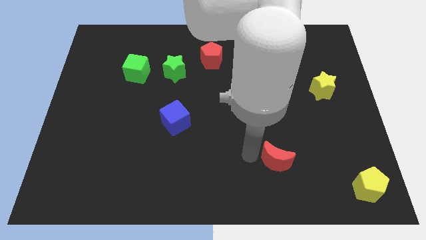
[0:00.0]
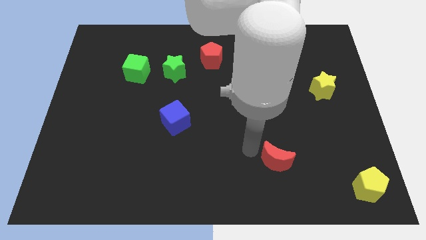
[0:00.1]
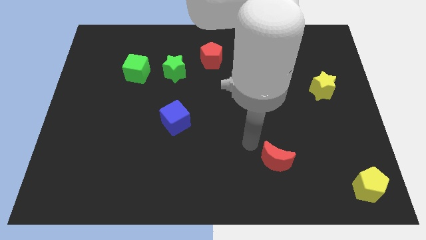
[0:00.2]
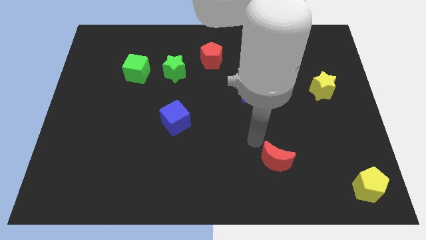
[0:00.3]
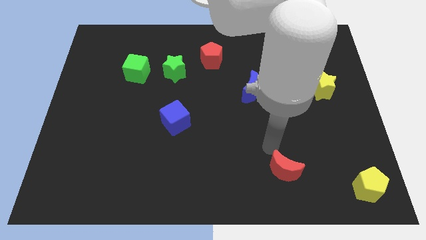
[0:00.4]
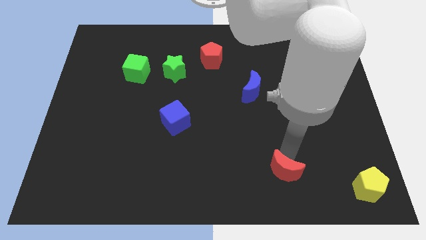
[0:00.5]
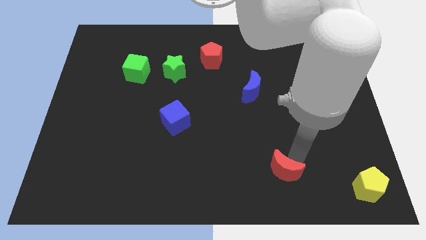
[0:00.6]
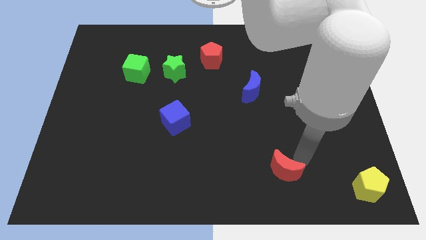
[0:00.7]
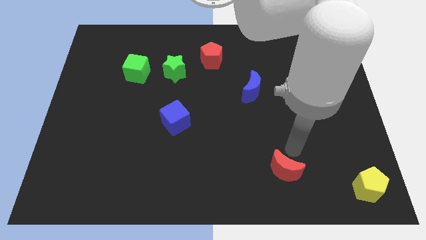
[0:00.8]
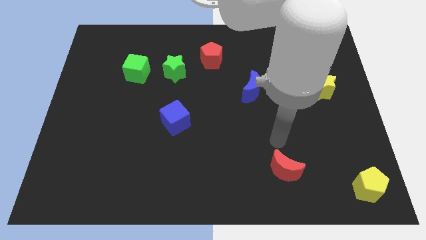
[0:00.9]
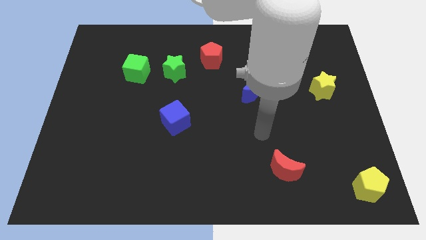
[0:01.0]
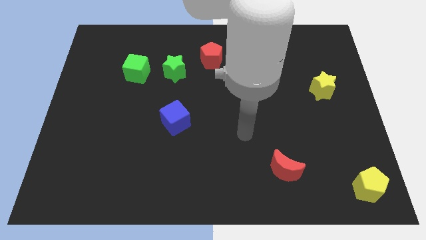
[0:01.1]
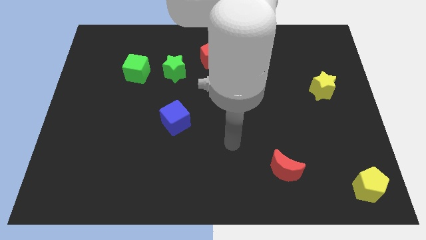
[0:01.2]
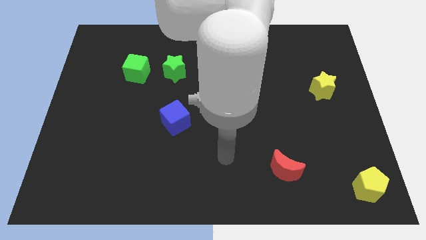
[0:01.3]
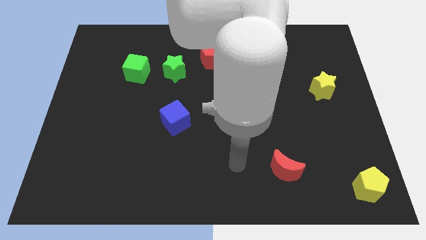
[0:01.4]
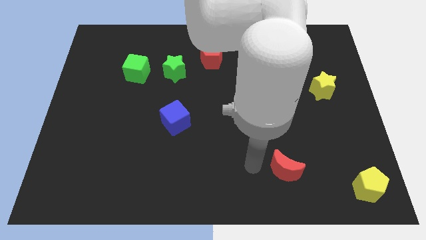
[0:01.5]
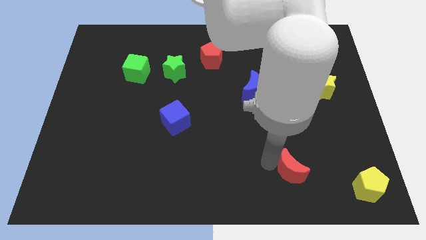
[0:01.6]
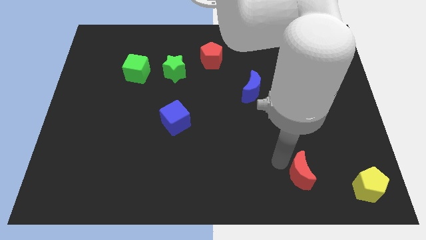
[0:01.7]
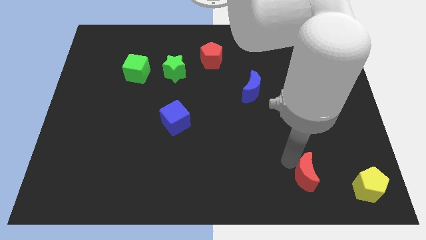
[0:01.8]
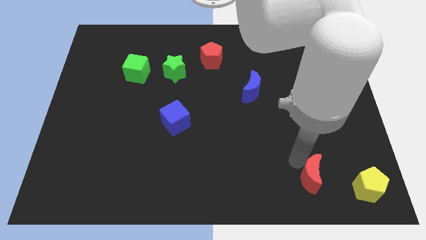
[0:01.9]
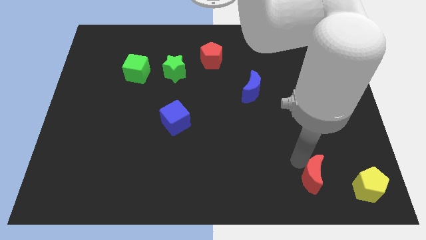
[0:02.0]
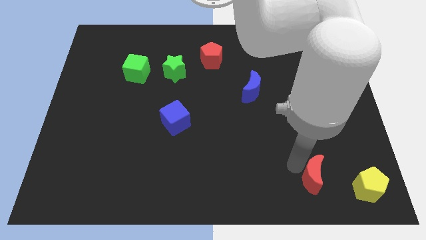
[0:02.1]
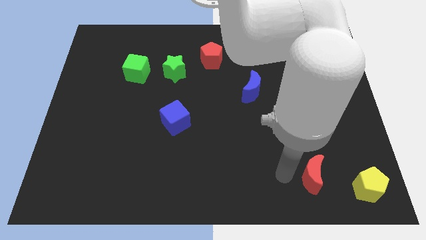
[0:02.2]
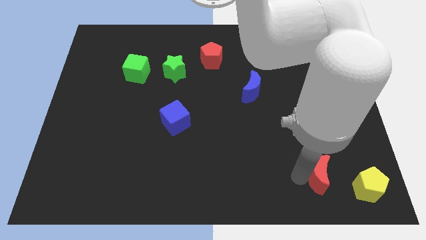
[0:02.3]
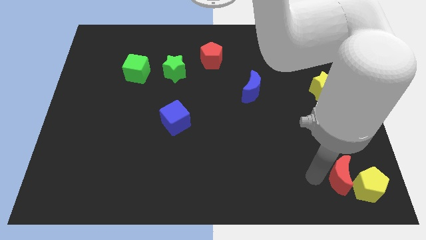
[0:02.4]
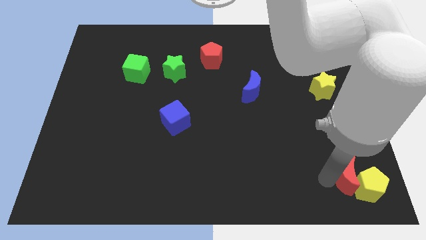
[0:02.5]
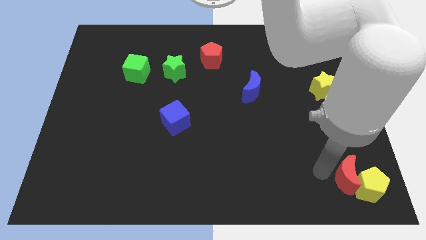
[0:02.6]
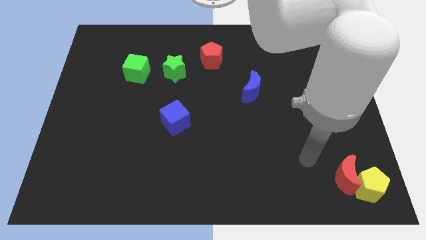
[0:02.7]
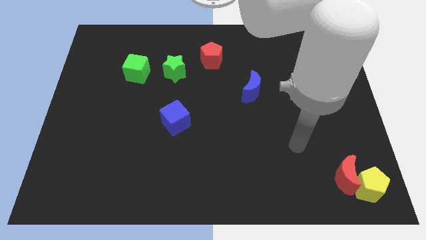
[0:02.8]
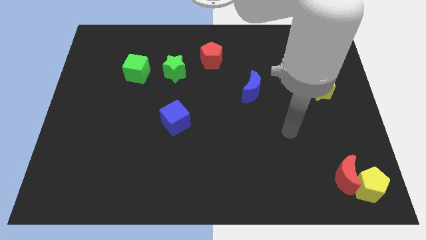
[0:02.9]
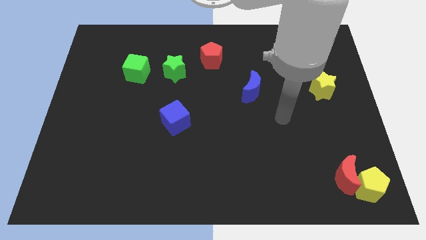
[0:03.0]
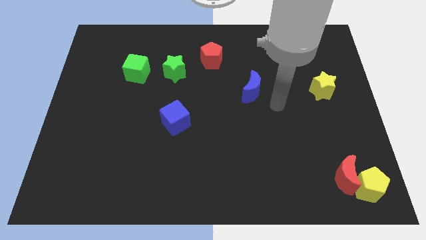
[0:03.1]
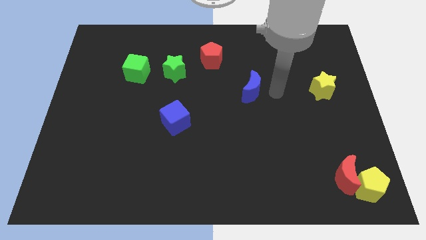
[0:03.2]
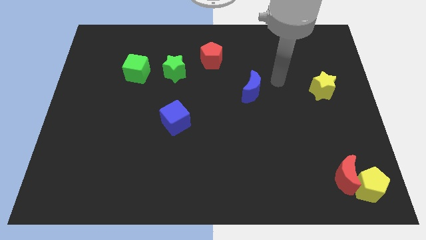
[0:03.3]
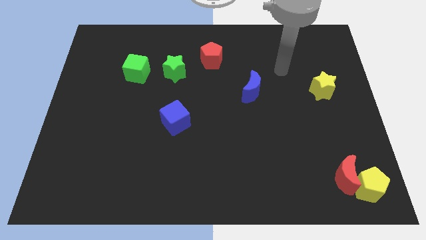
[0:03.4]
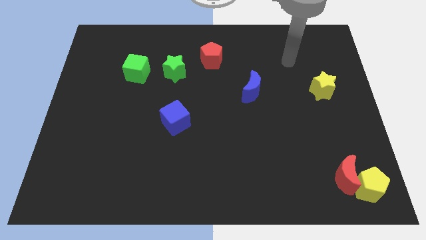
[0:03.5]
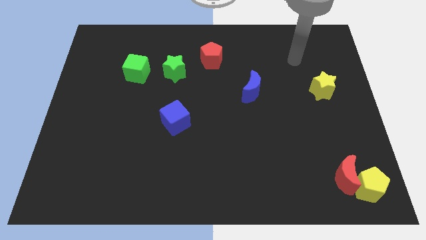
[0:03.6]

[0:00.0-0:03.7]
move the red moon into the yellow pentagon

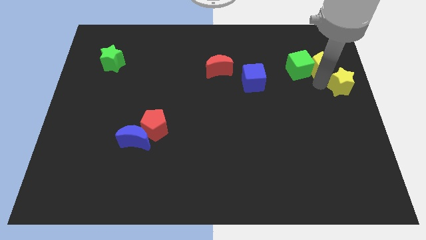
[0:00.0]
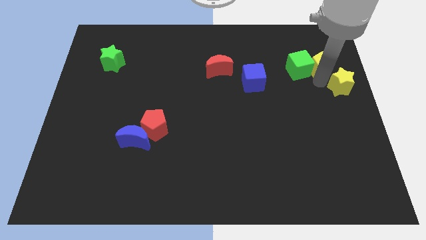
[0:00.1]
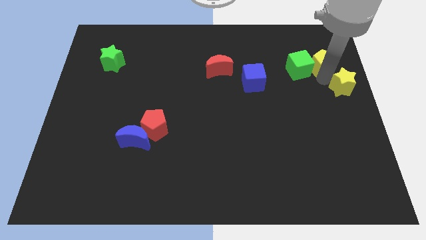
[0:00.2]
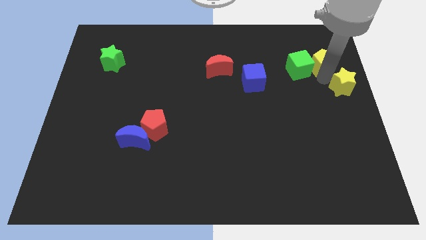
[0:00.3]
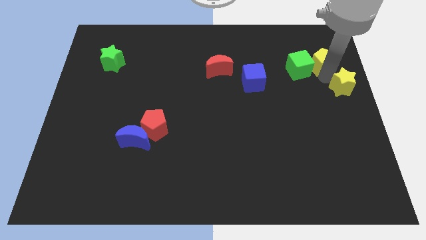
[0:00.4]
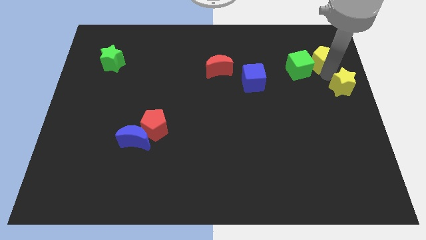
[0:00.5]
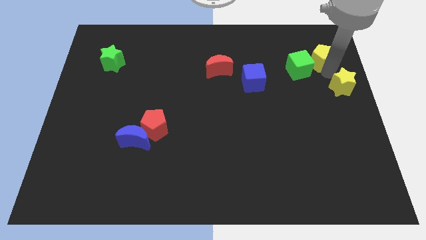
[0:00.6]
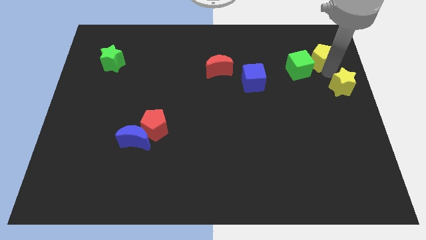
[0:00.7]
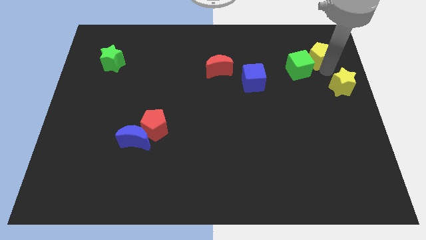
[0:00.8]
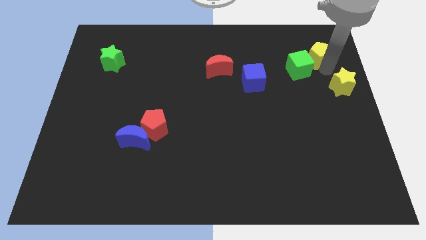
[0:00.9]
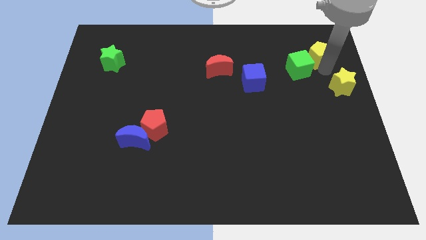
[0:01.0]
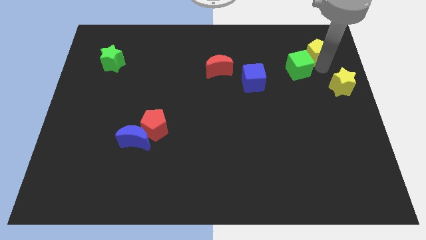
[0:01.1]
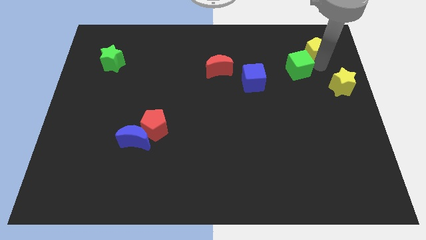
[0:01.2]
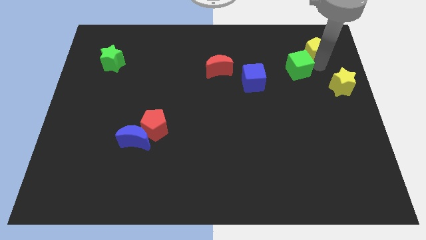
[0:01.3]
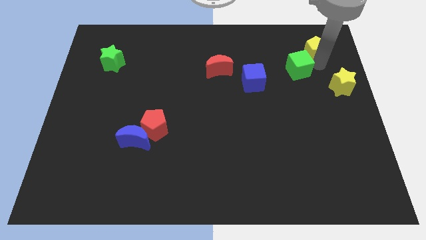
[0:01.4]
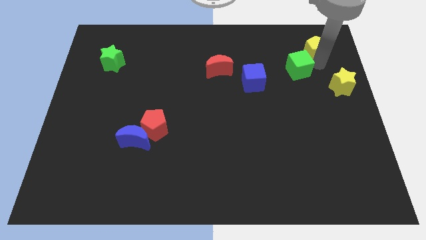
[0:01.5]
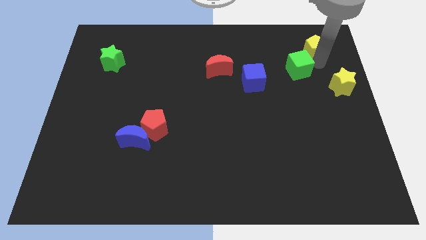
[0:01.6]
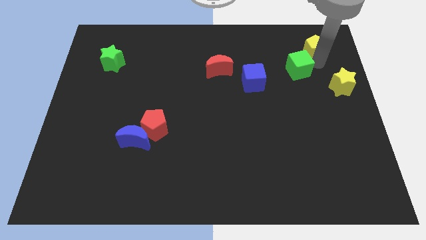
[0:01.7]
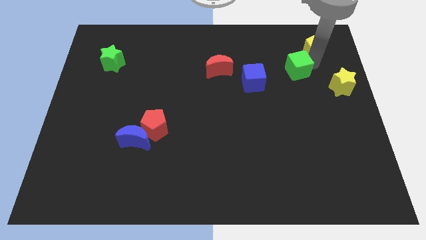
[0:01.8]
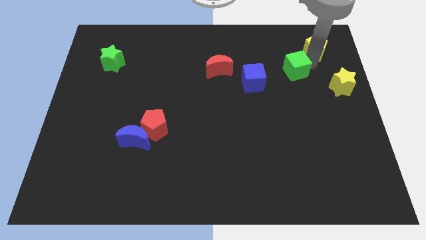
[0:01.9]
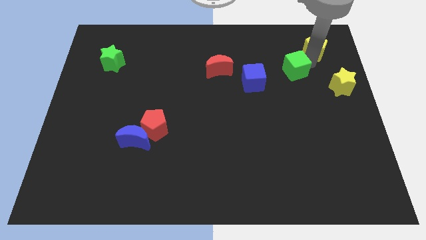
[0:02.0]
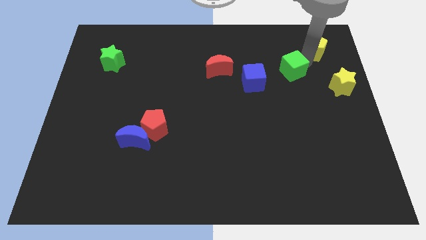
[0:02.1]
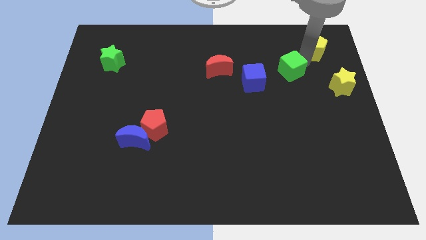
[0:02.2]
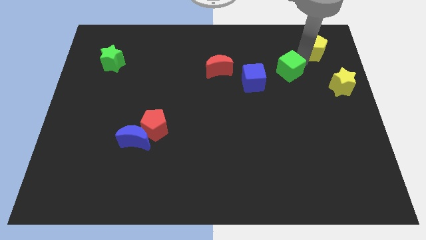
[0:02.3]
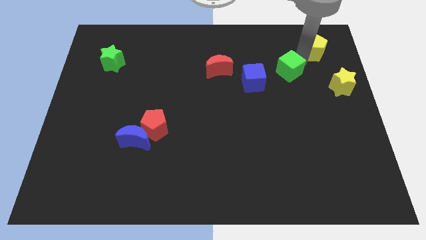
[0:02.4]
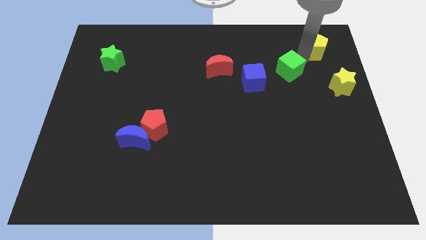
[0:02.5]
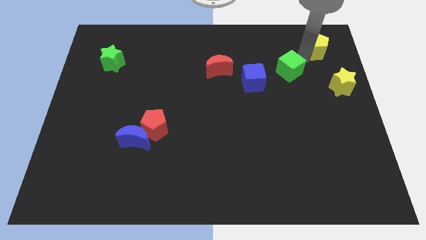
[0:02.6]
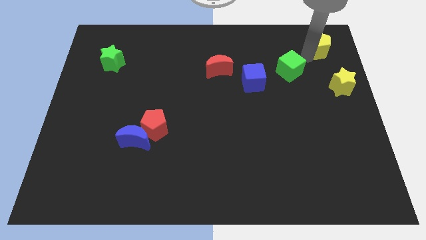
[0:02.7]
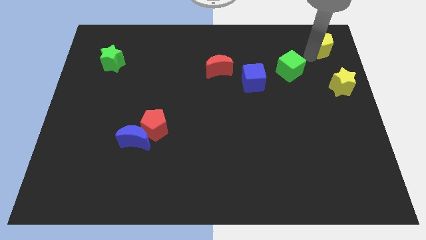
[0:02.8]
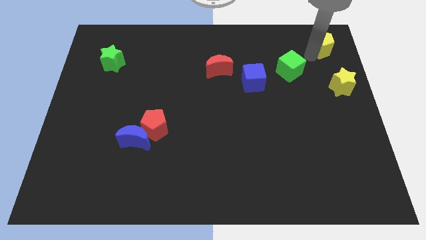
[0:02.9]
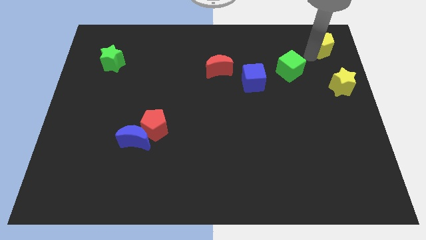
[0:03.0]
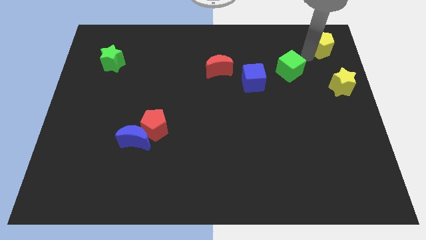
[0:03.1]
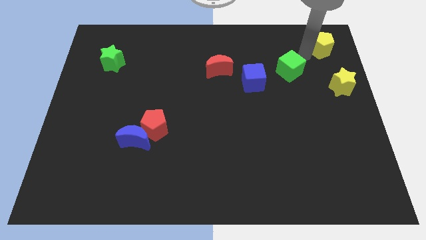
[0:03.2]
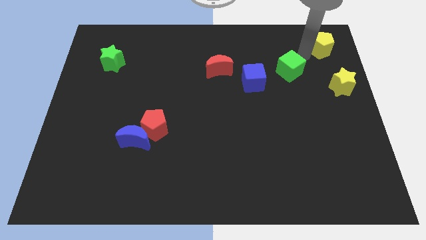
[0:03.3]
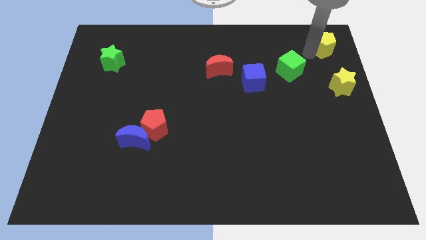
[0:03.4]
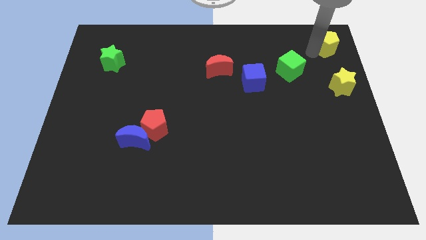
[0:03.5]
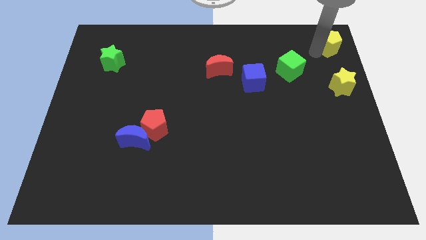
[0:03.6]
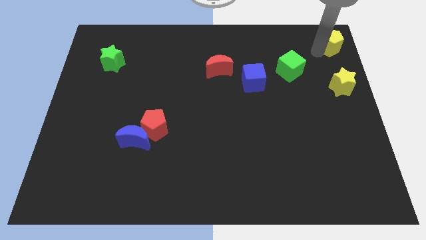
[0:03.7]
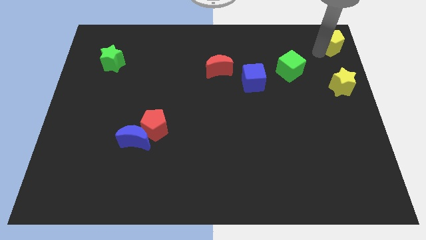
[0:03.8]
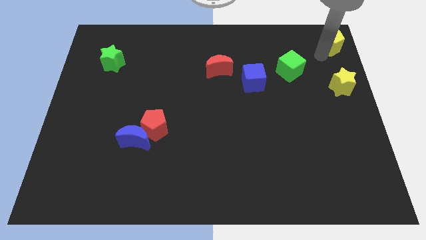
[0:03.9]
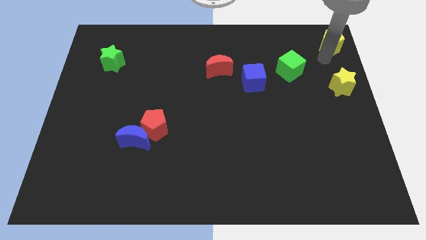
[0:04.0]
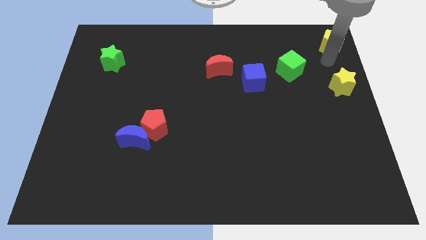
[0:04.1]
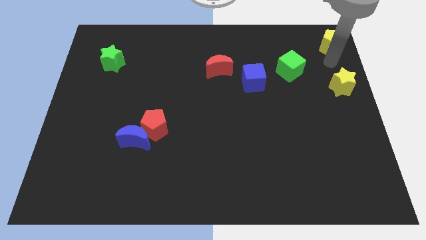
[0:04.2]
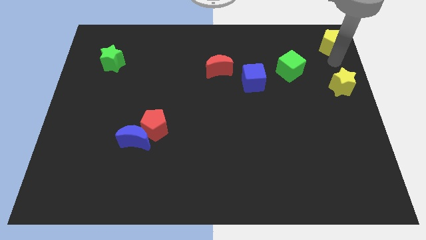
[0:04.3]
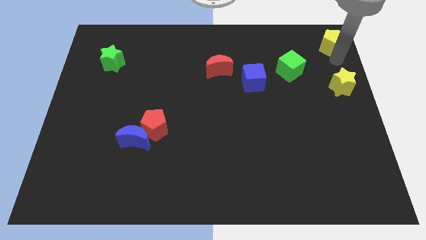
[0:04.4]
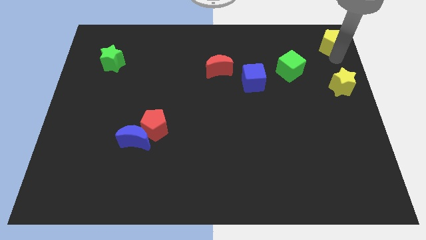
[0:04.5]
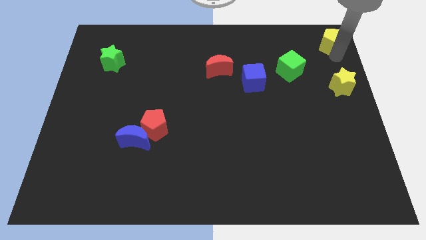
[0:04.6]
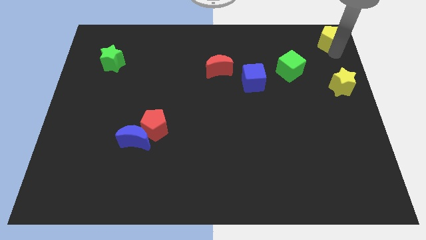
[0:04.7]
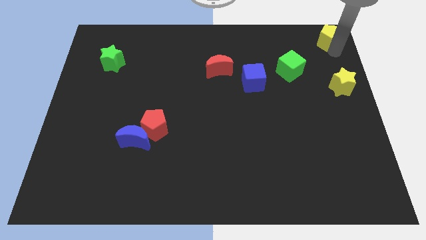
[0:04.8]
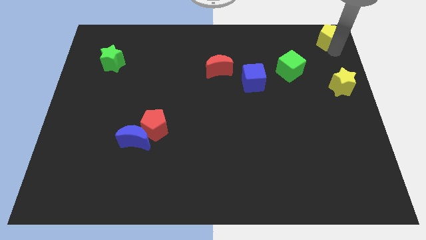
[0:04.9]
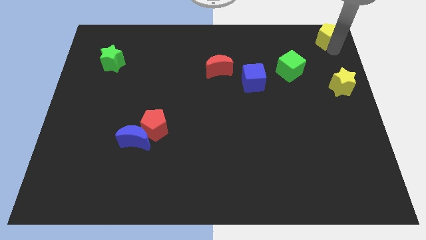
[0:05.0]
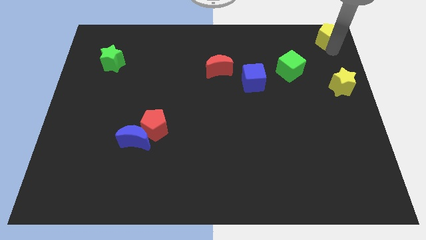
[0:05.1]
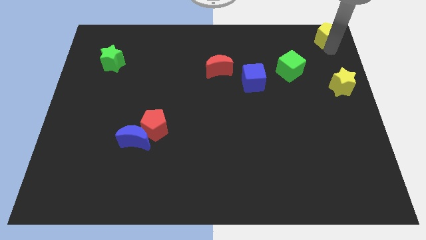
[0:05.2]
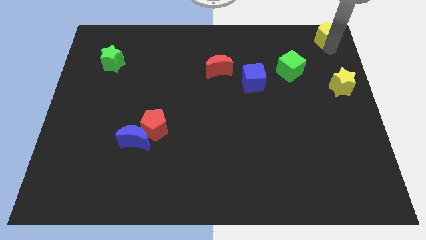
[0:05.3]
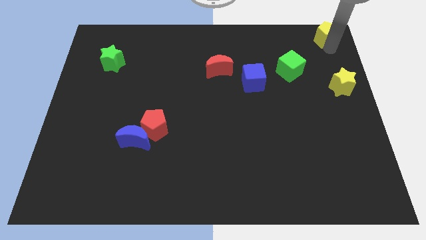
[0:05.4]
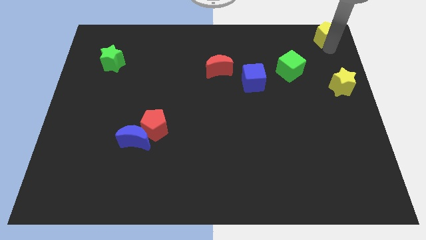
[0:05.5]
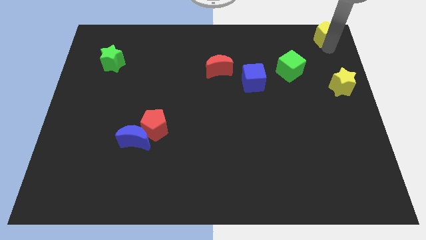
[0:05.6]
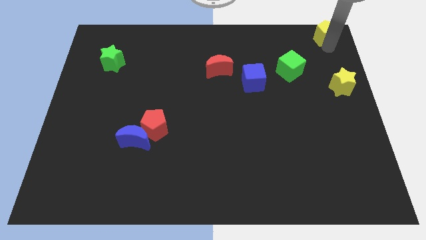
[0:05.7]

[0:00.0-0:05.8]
drag yellow pentagon towards top right side of the board
